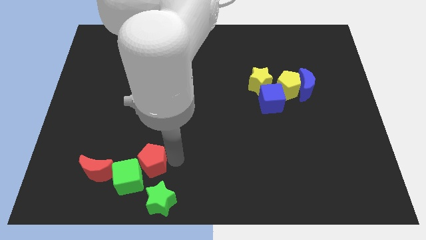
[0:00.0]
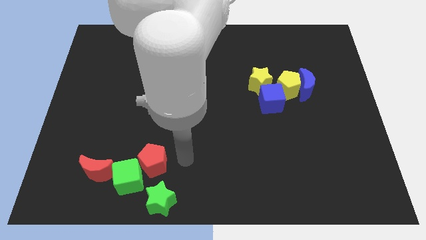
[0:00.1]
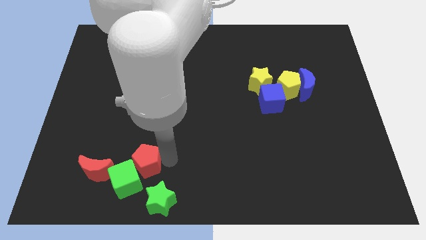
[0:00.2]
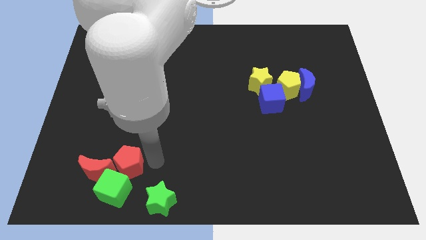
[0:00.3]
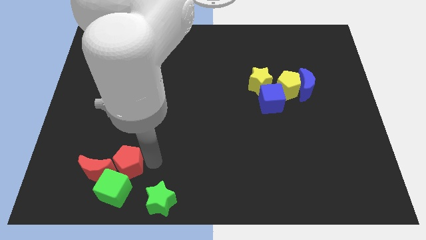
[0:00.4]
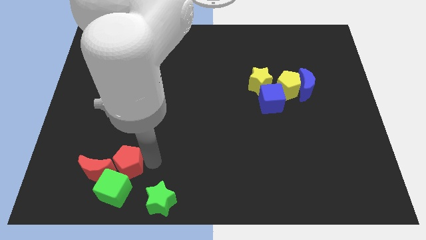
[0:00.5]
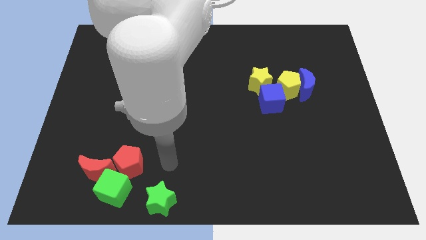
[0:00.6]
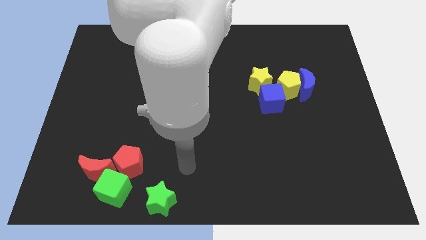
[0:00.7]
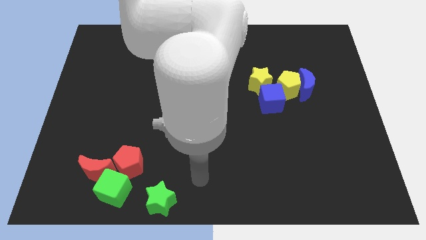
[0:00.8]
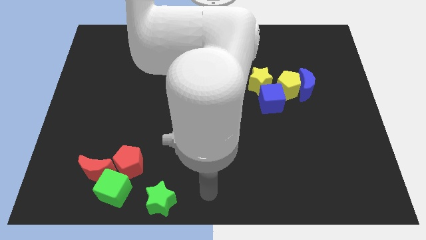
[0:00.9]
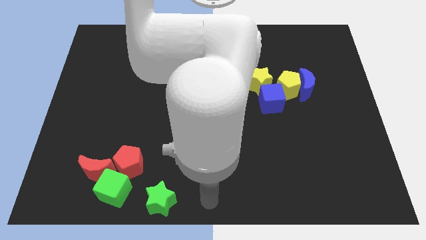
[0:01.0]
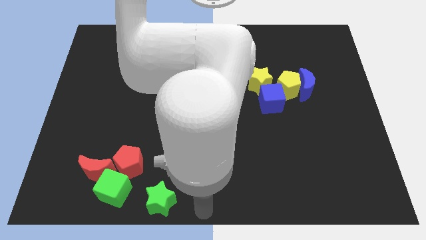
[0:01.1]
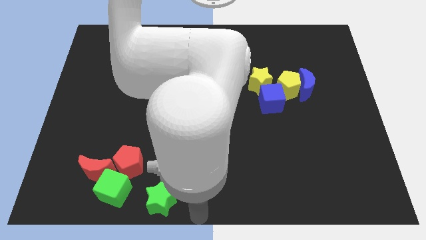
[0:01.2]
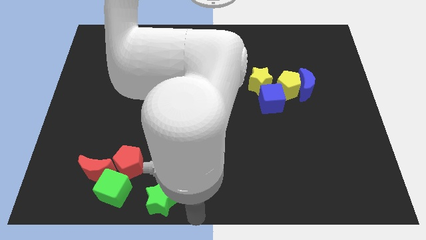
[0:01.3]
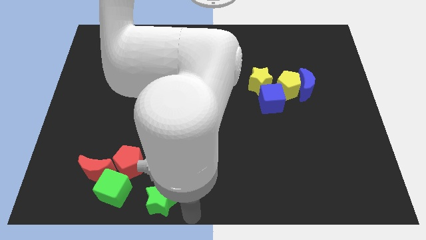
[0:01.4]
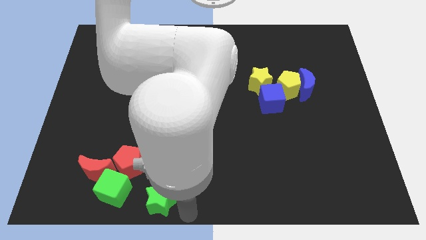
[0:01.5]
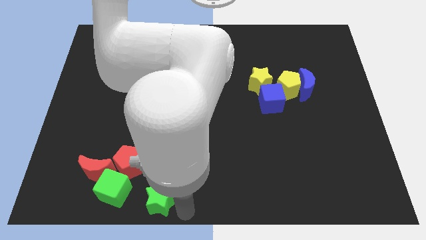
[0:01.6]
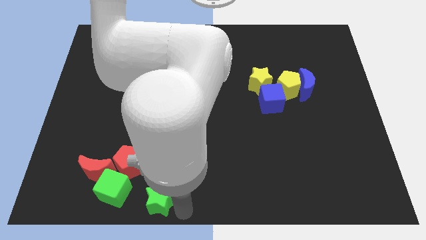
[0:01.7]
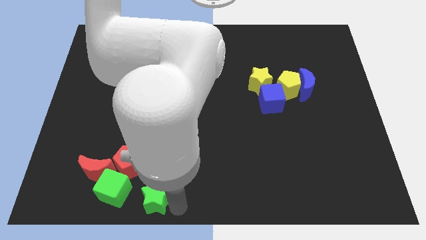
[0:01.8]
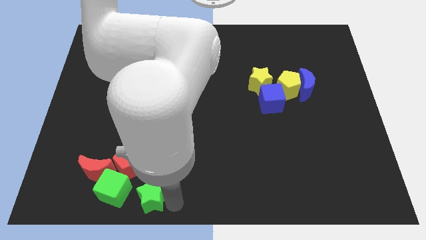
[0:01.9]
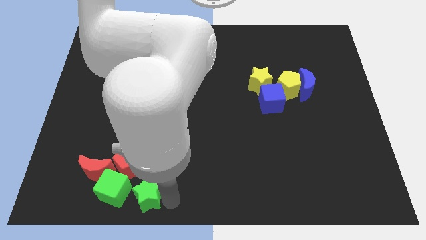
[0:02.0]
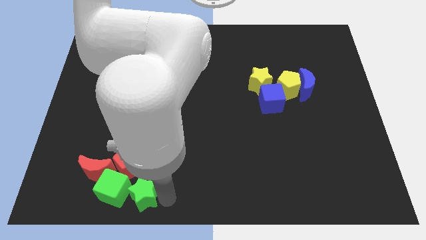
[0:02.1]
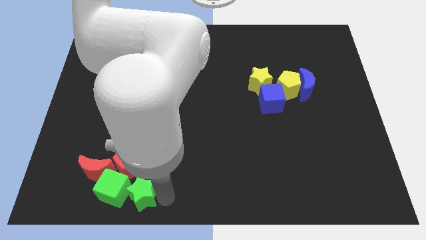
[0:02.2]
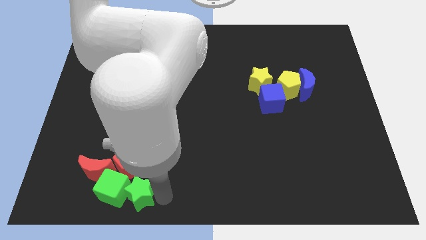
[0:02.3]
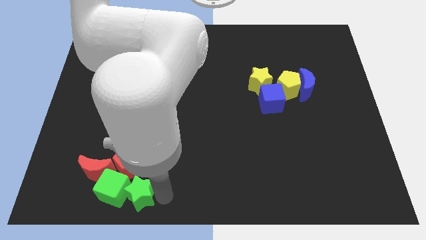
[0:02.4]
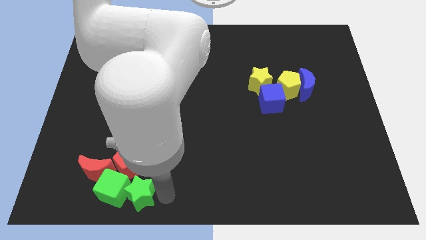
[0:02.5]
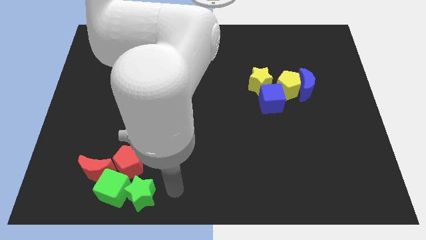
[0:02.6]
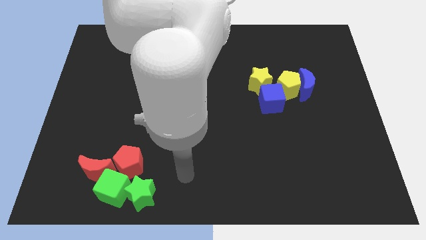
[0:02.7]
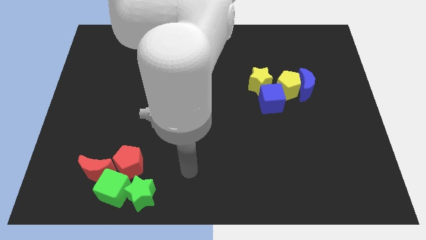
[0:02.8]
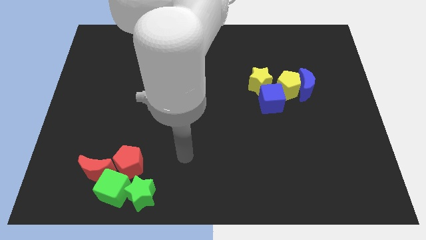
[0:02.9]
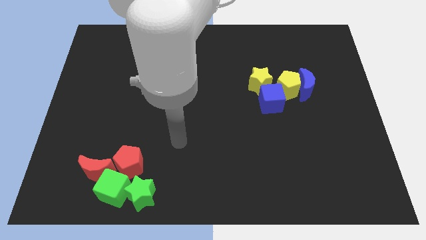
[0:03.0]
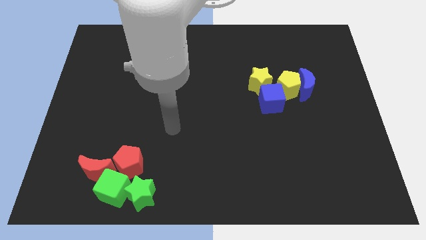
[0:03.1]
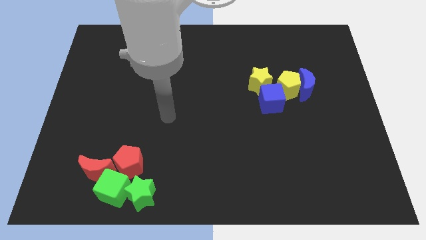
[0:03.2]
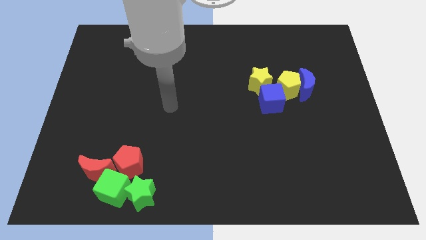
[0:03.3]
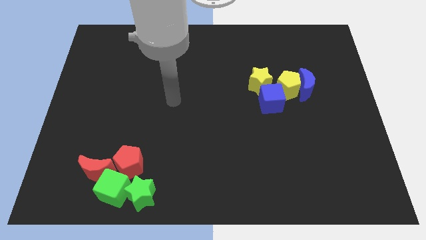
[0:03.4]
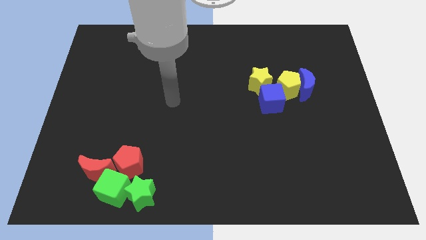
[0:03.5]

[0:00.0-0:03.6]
group up the green blocks with the red blocks at the bottom left of the table

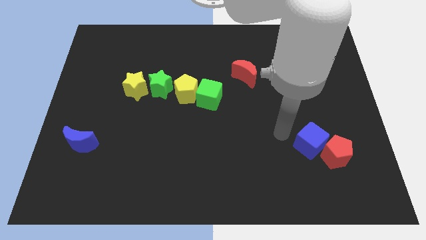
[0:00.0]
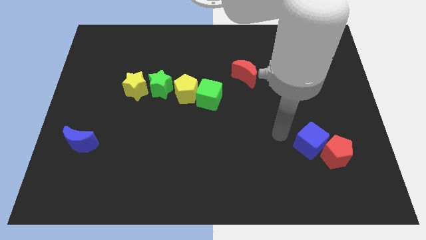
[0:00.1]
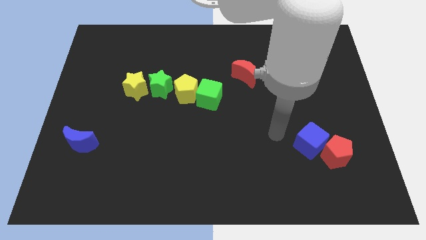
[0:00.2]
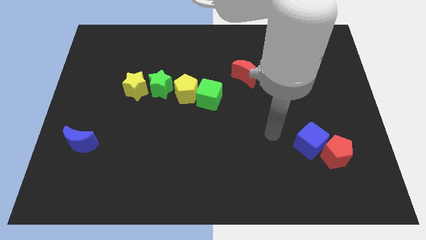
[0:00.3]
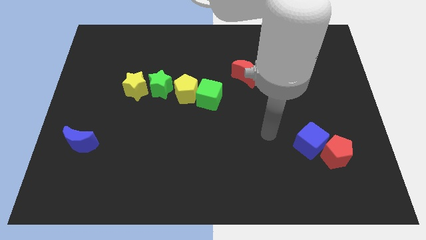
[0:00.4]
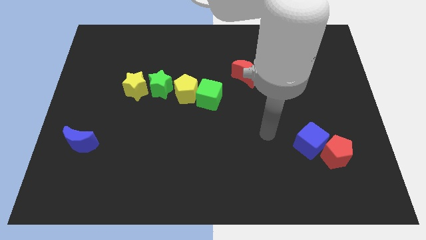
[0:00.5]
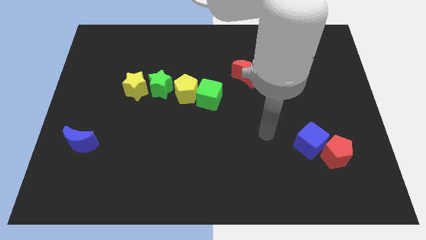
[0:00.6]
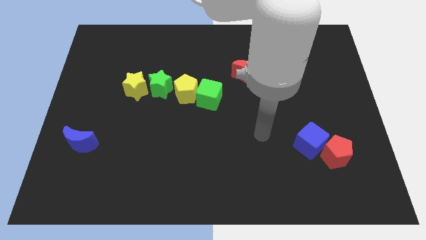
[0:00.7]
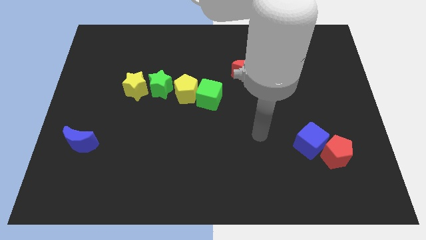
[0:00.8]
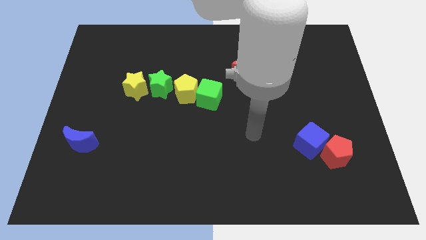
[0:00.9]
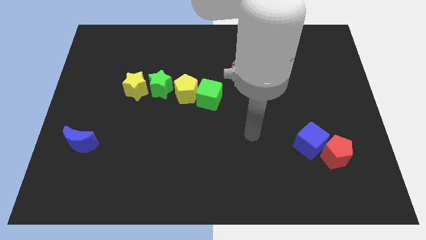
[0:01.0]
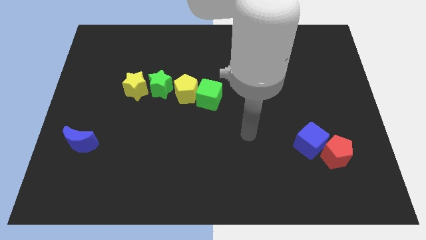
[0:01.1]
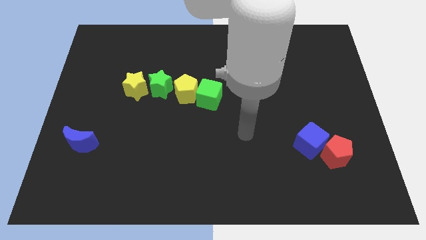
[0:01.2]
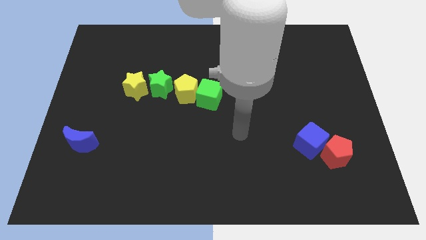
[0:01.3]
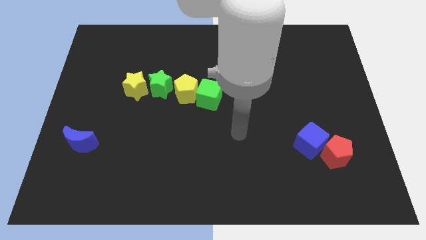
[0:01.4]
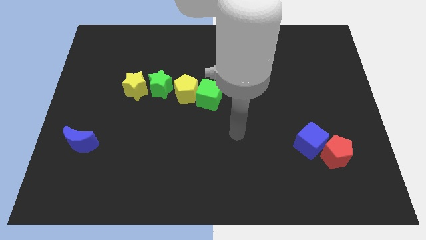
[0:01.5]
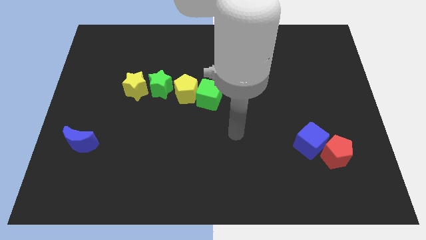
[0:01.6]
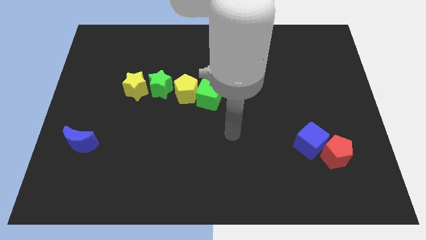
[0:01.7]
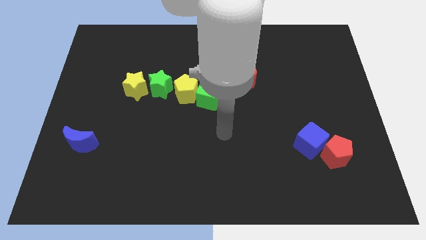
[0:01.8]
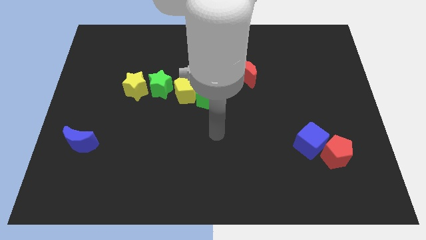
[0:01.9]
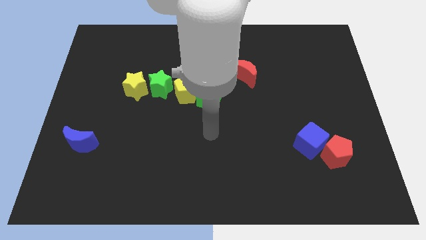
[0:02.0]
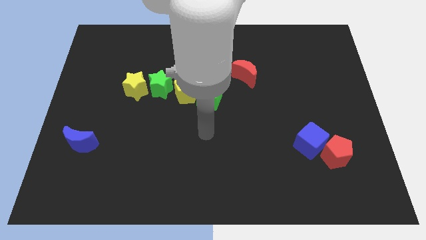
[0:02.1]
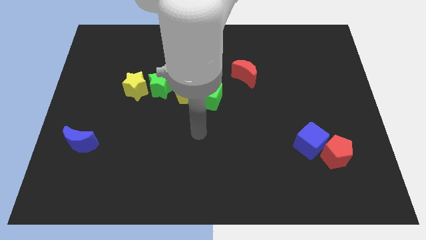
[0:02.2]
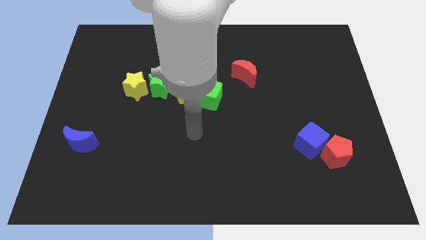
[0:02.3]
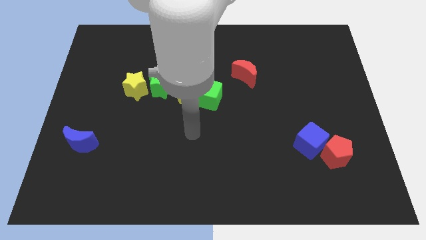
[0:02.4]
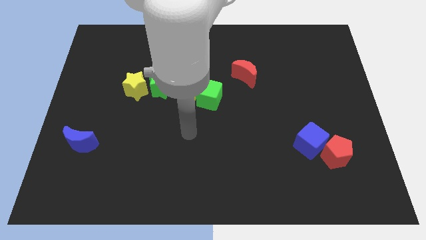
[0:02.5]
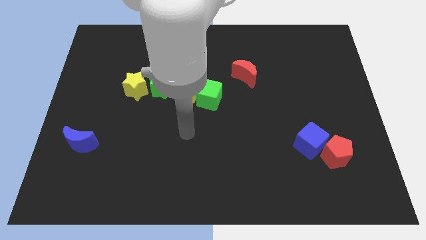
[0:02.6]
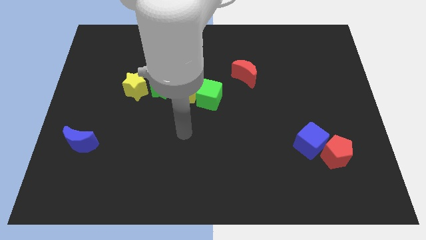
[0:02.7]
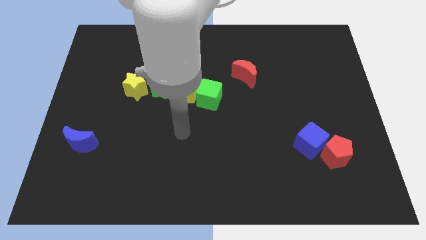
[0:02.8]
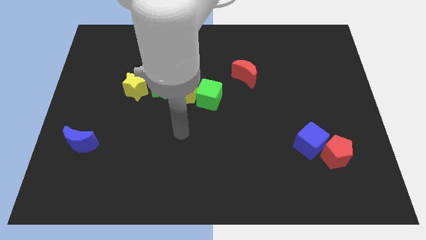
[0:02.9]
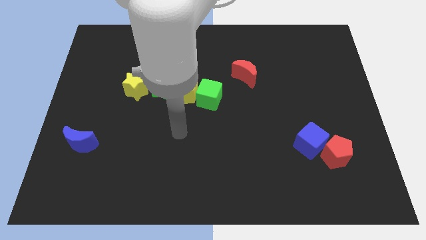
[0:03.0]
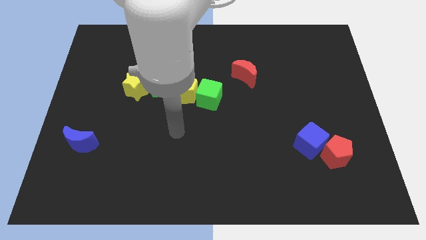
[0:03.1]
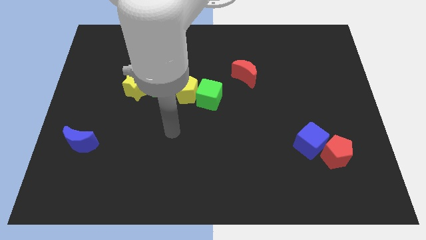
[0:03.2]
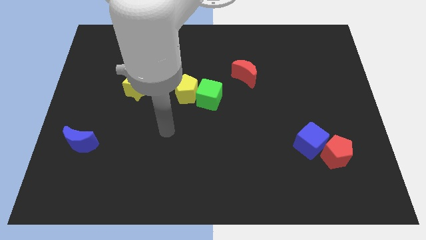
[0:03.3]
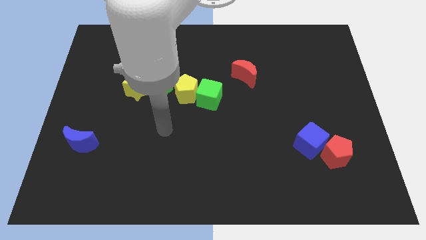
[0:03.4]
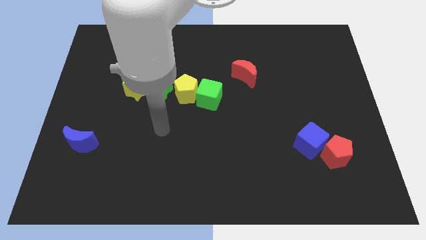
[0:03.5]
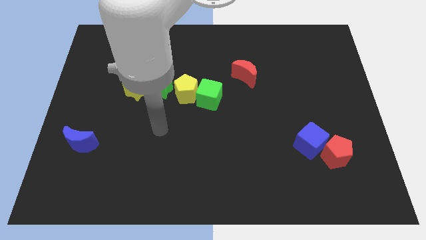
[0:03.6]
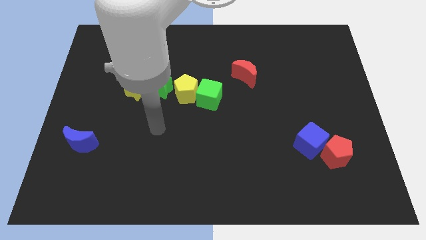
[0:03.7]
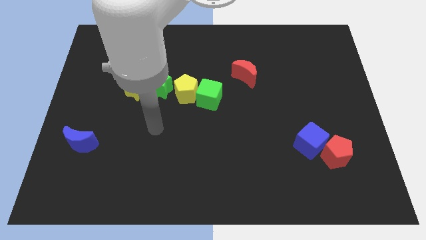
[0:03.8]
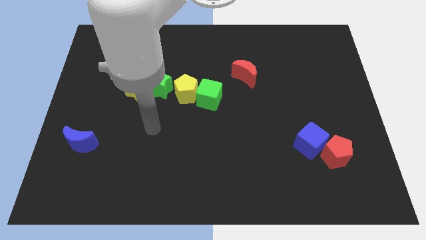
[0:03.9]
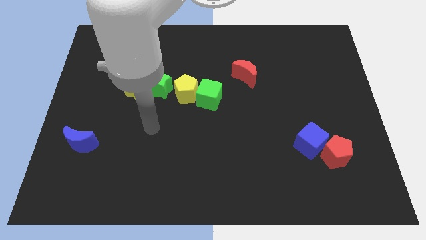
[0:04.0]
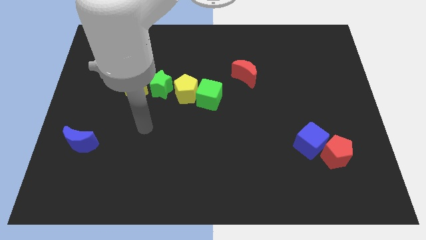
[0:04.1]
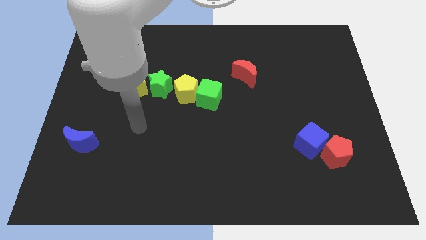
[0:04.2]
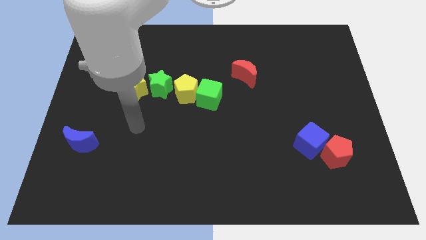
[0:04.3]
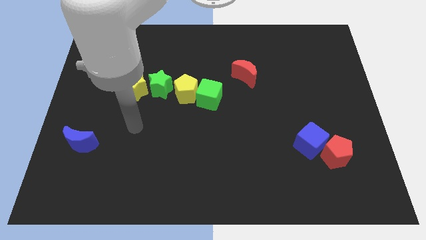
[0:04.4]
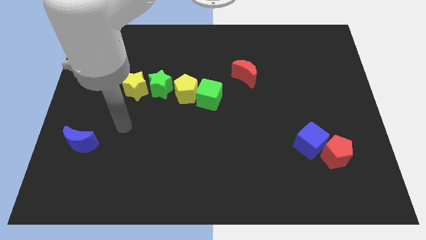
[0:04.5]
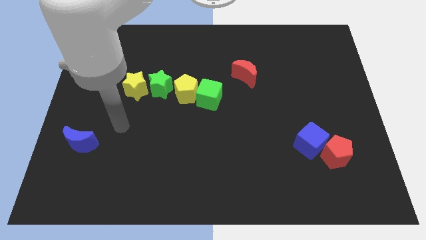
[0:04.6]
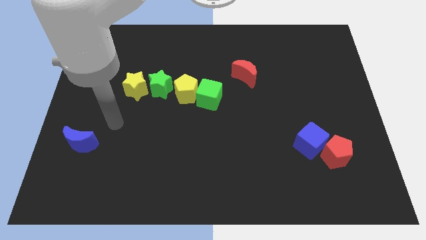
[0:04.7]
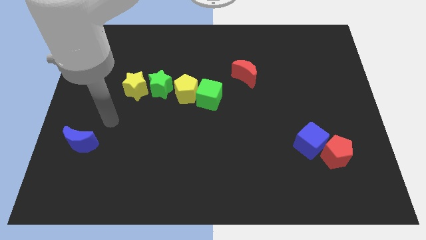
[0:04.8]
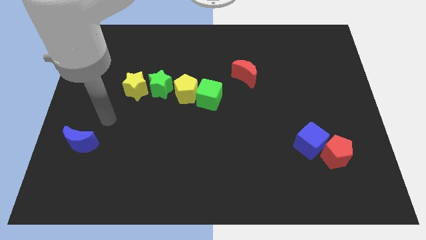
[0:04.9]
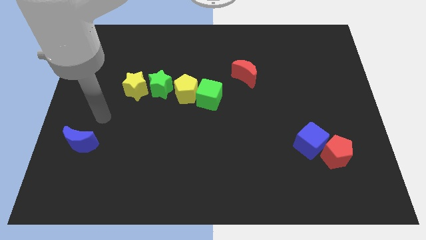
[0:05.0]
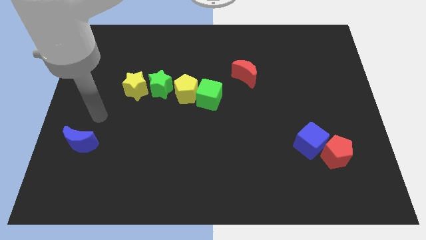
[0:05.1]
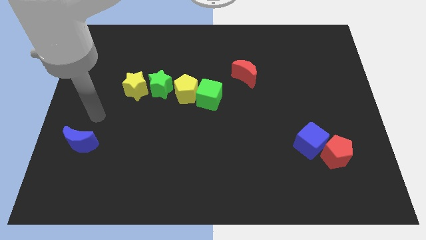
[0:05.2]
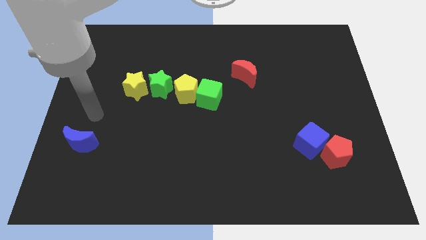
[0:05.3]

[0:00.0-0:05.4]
go to the blue crescent

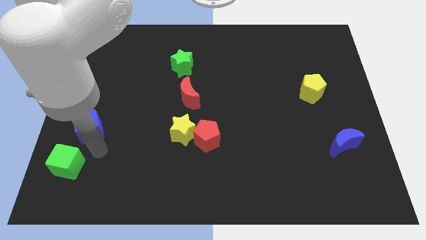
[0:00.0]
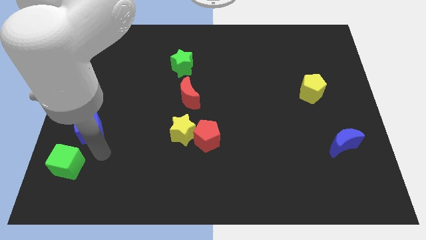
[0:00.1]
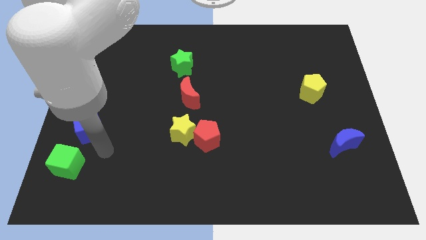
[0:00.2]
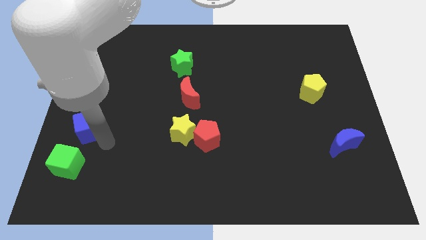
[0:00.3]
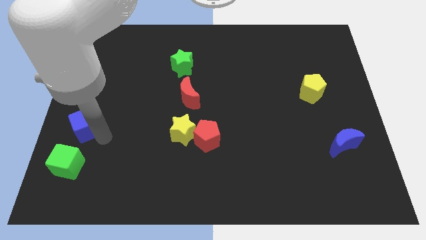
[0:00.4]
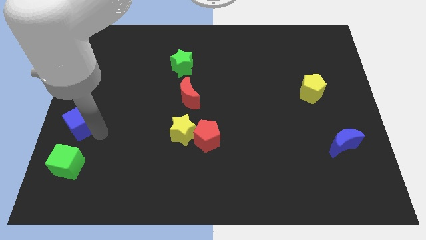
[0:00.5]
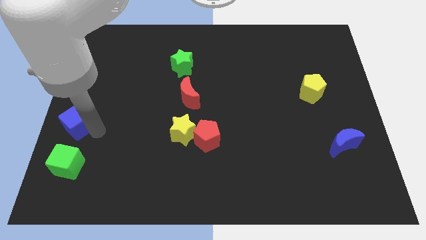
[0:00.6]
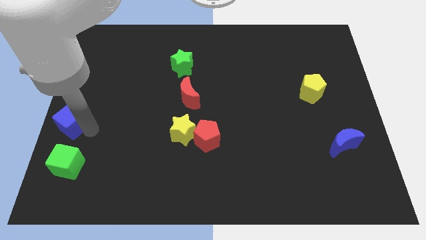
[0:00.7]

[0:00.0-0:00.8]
move blue cube above green cube
